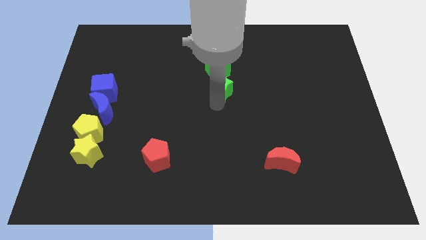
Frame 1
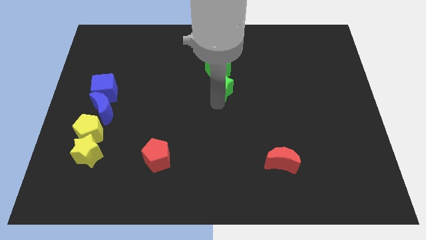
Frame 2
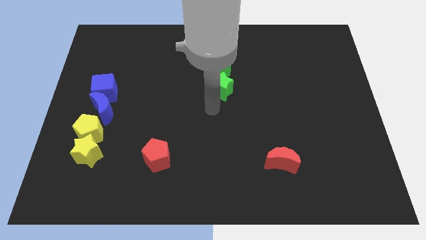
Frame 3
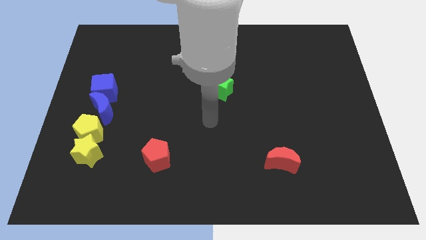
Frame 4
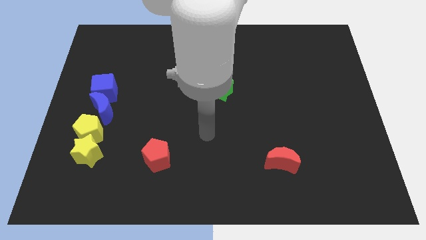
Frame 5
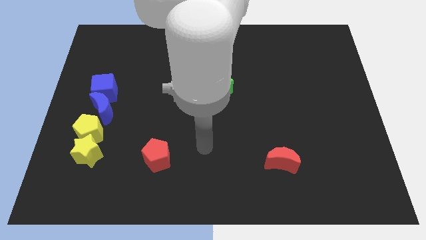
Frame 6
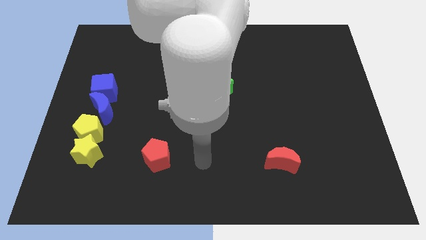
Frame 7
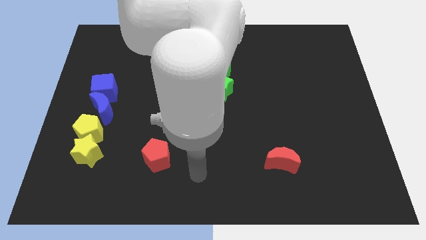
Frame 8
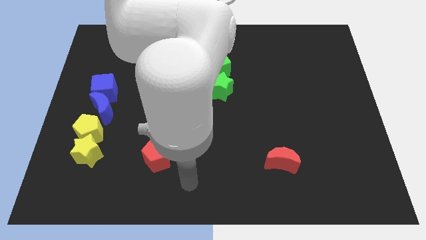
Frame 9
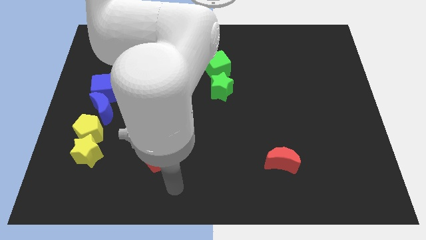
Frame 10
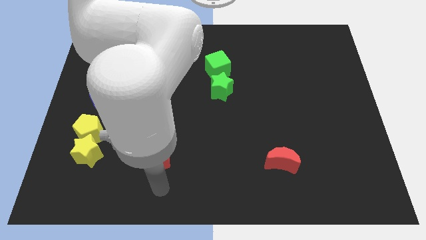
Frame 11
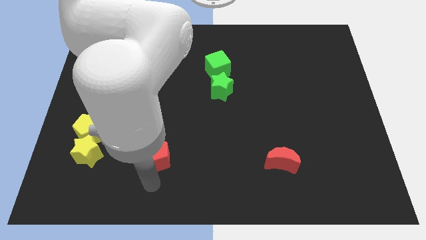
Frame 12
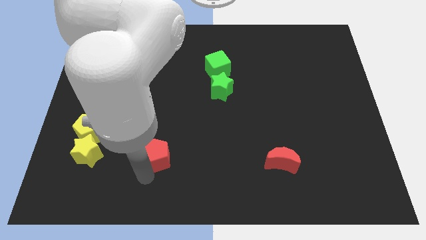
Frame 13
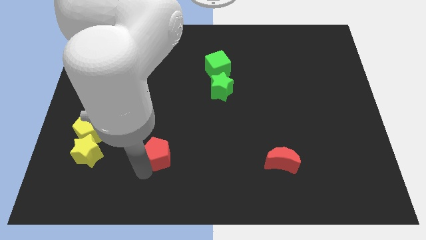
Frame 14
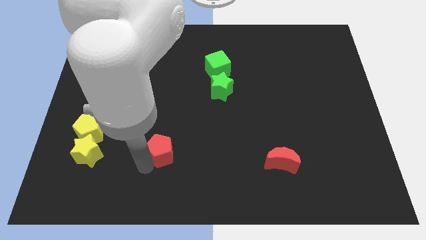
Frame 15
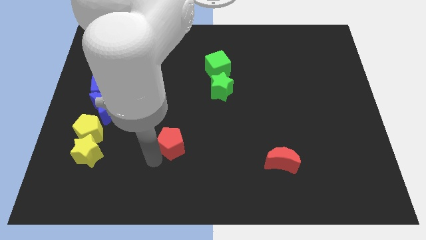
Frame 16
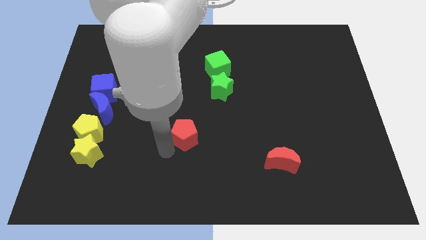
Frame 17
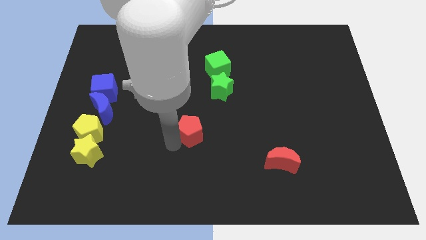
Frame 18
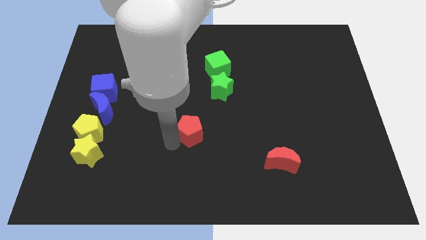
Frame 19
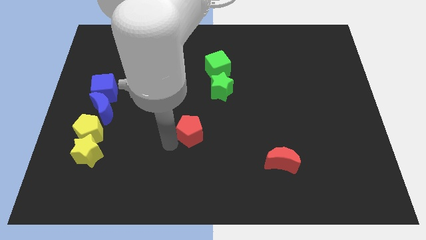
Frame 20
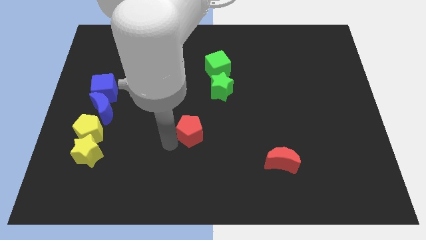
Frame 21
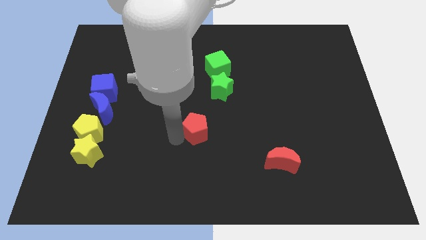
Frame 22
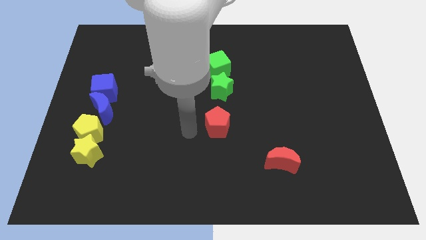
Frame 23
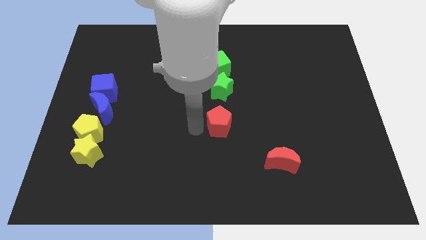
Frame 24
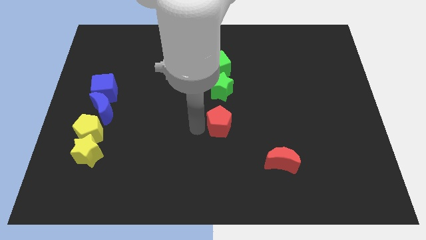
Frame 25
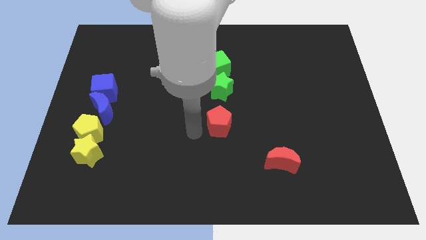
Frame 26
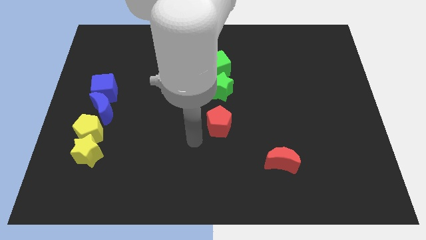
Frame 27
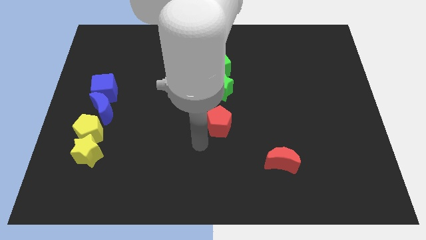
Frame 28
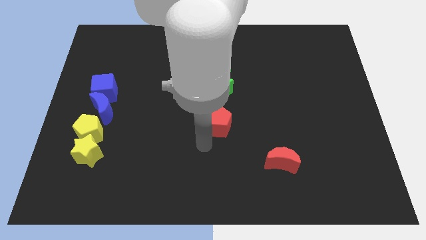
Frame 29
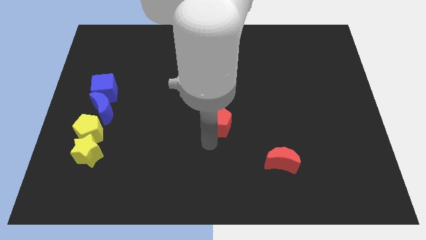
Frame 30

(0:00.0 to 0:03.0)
slide the red pentagon to the bottom of green star

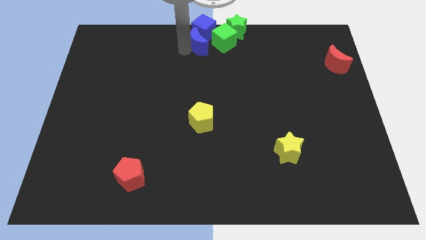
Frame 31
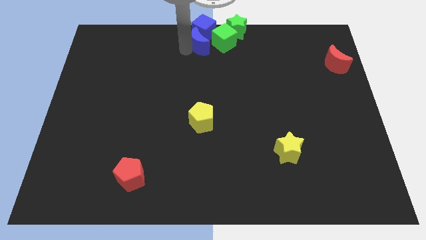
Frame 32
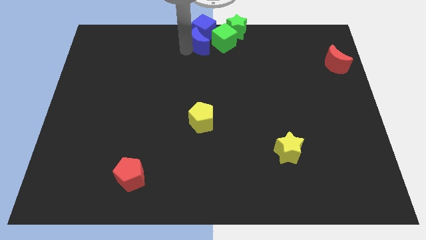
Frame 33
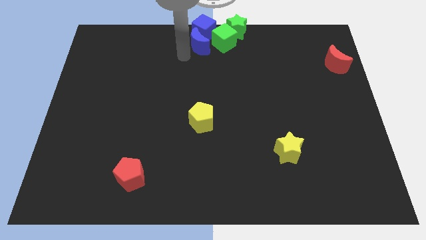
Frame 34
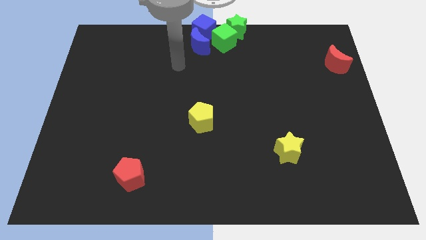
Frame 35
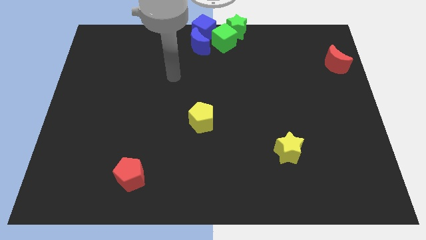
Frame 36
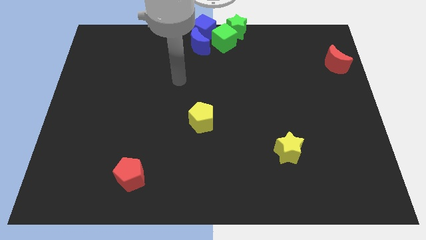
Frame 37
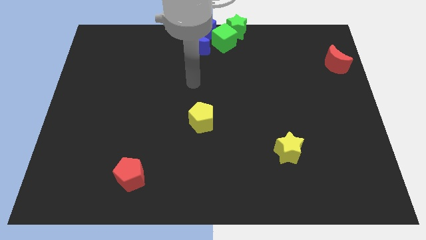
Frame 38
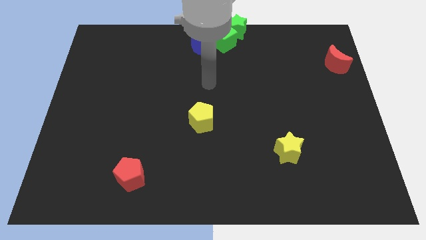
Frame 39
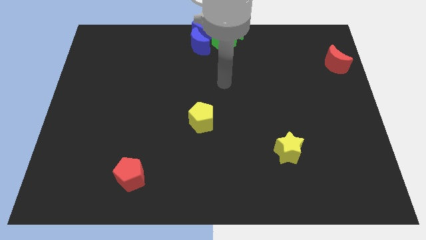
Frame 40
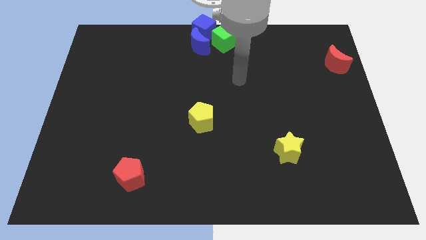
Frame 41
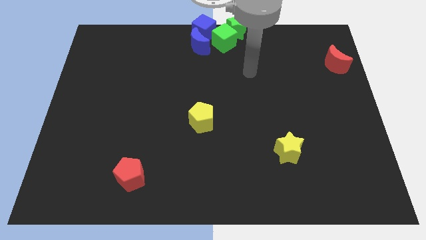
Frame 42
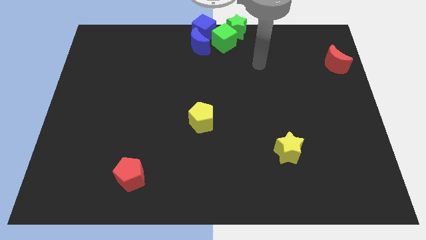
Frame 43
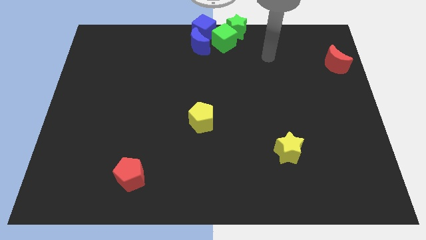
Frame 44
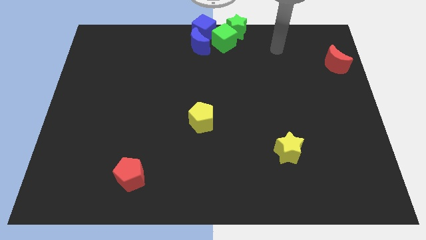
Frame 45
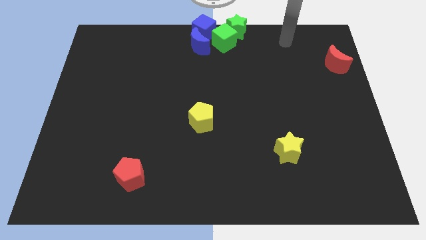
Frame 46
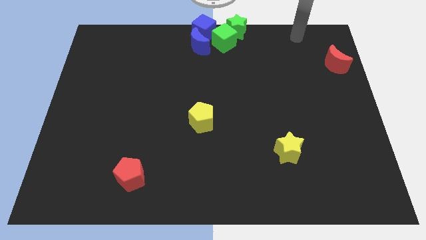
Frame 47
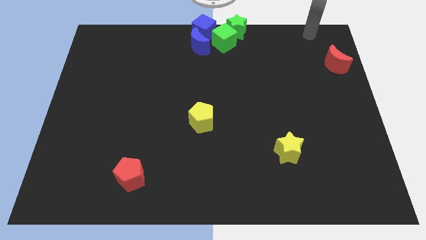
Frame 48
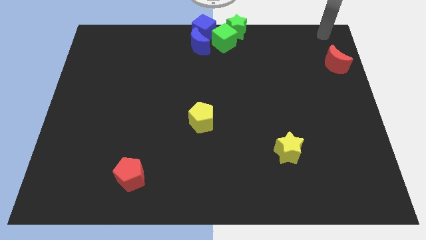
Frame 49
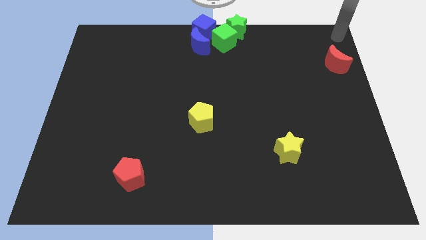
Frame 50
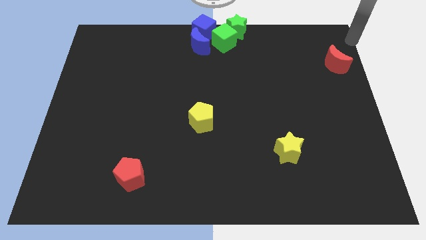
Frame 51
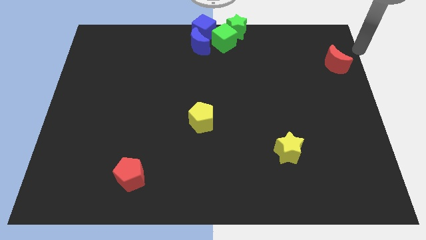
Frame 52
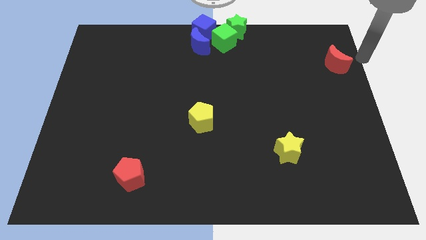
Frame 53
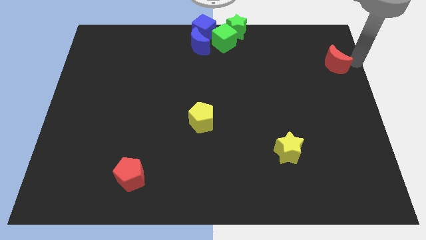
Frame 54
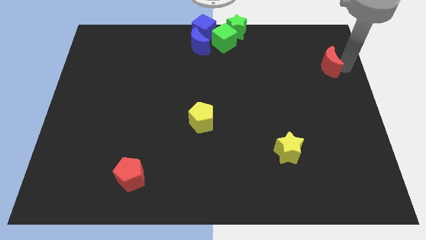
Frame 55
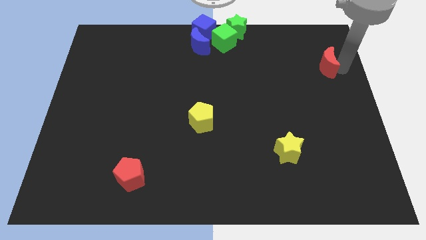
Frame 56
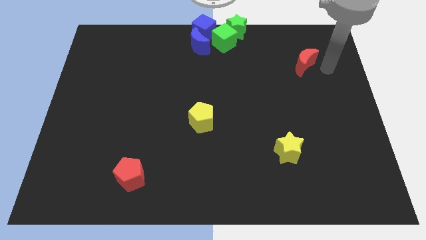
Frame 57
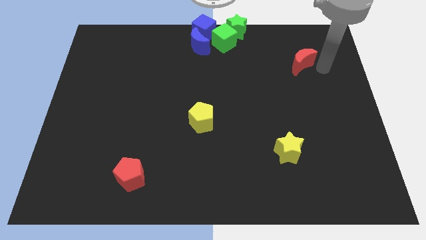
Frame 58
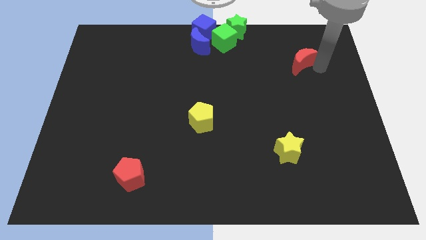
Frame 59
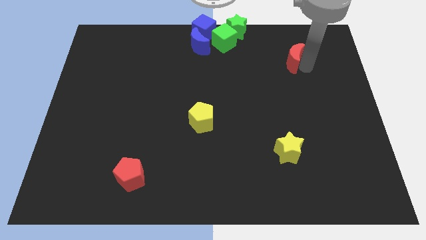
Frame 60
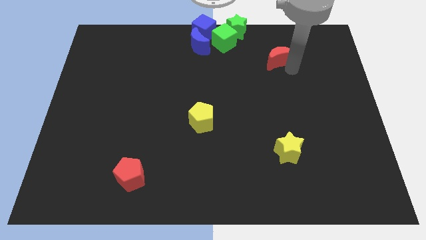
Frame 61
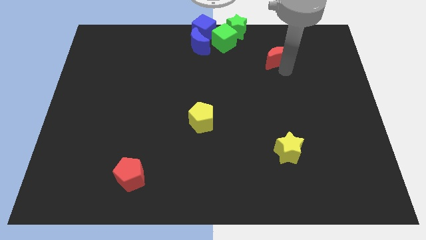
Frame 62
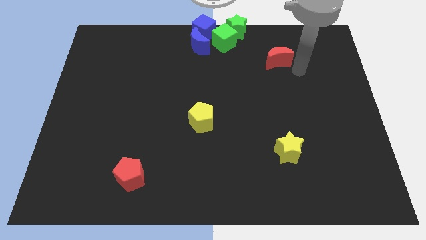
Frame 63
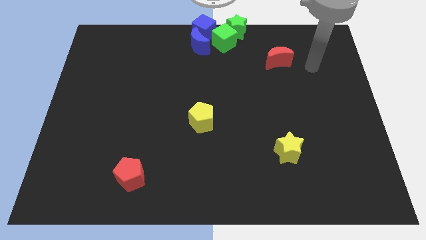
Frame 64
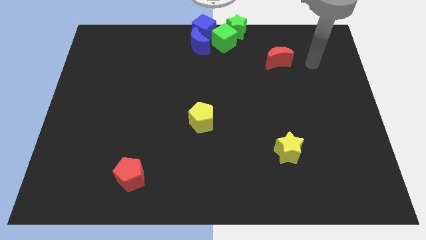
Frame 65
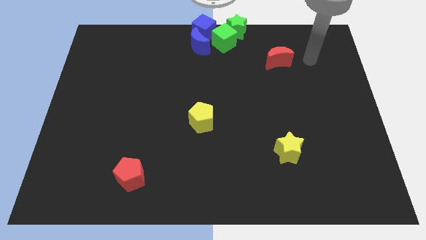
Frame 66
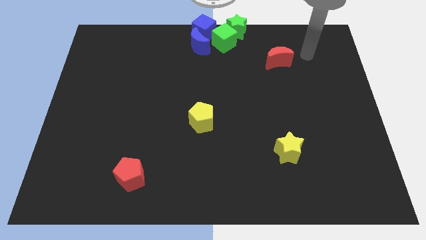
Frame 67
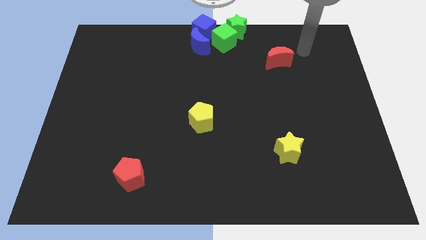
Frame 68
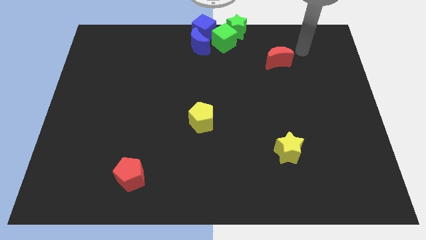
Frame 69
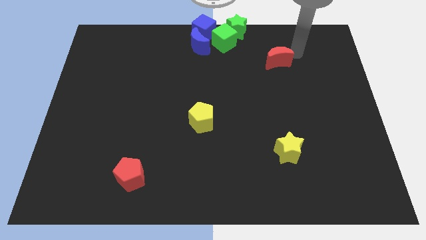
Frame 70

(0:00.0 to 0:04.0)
move the red crescent slightly to the left

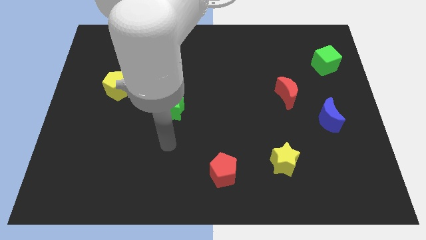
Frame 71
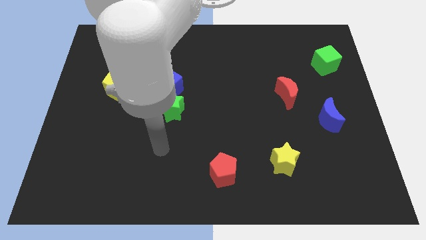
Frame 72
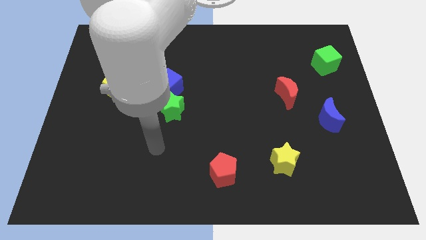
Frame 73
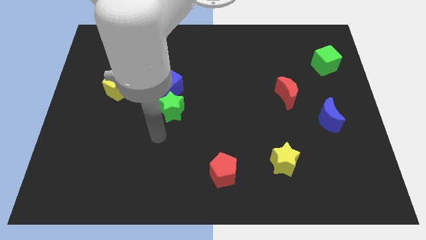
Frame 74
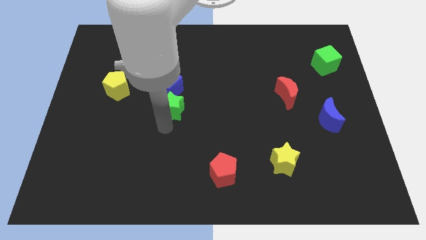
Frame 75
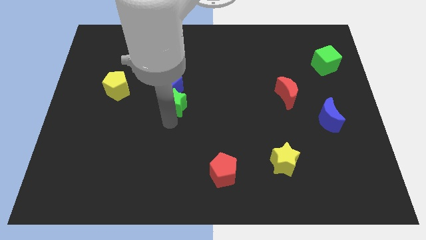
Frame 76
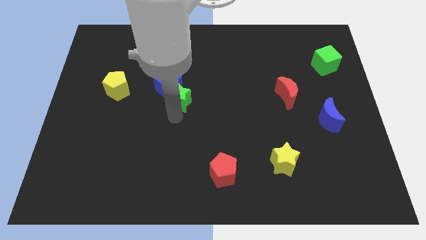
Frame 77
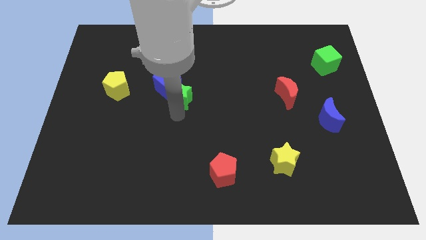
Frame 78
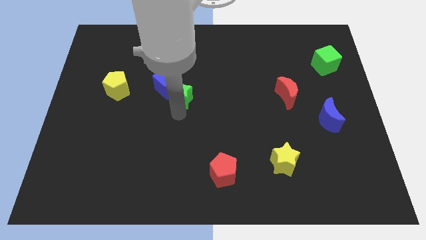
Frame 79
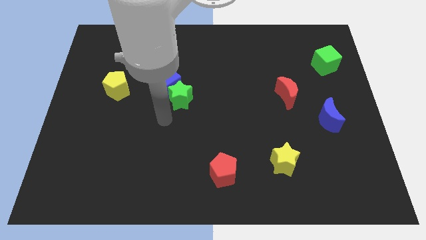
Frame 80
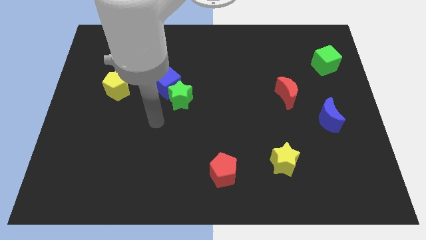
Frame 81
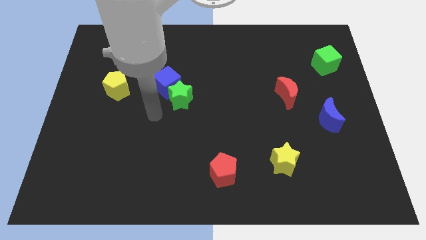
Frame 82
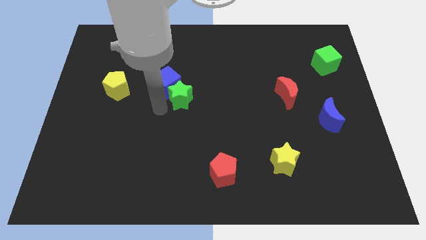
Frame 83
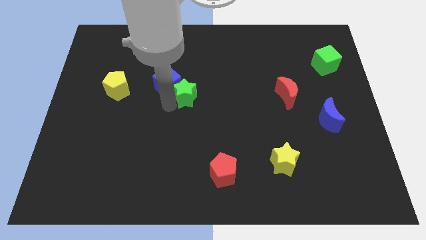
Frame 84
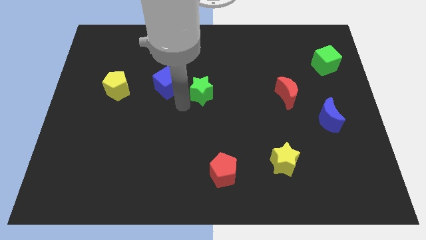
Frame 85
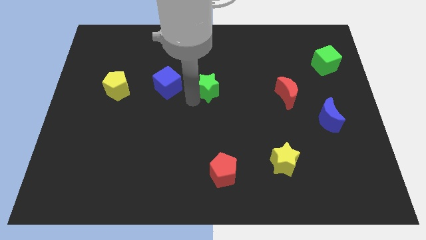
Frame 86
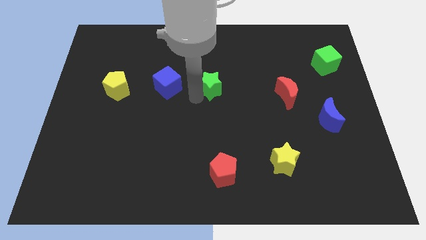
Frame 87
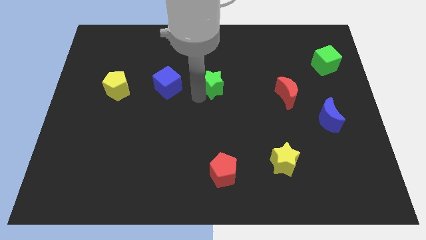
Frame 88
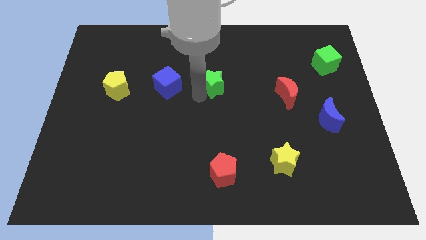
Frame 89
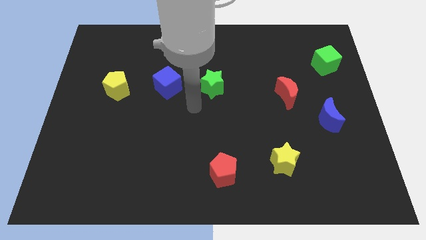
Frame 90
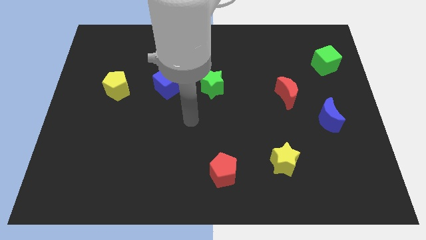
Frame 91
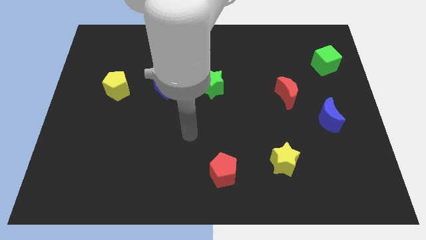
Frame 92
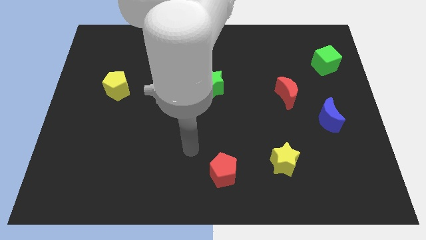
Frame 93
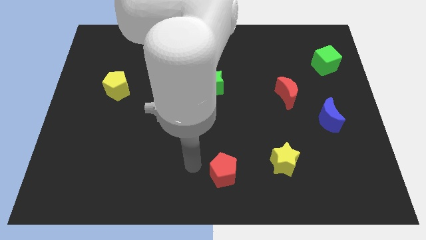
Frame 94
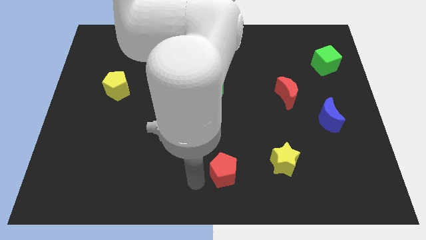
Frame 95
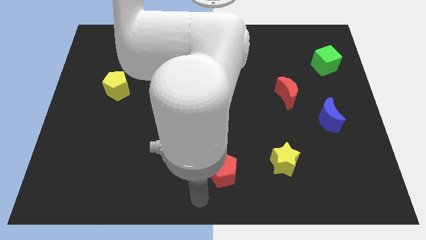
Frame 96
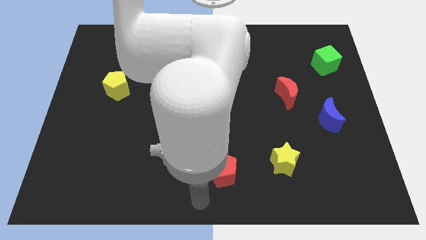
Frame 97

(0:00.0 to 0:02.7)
place the green star to the right side of blue cube
